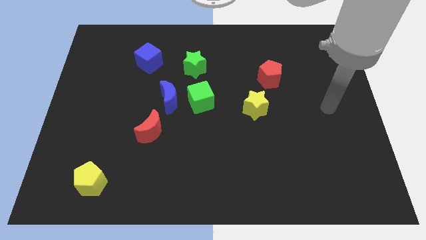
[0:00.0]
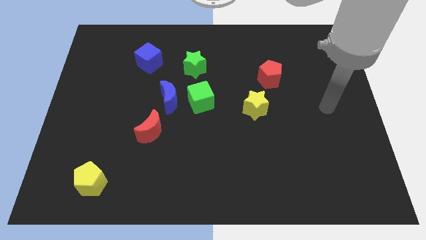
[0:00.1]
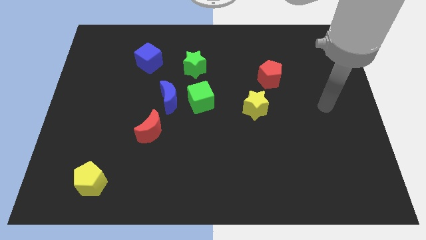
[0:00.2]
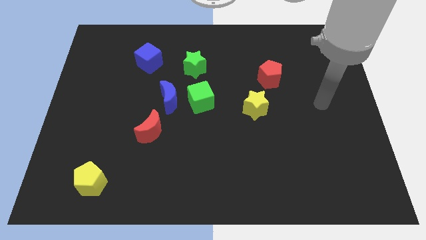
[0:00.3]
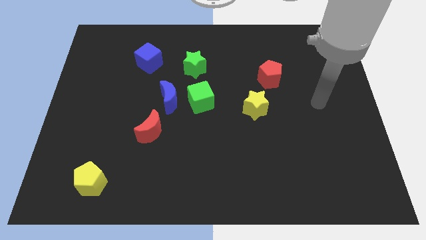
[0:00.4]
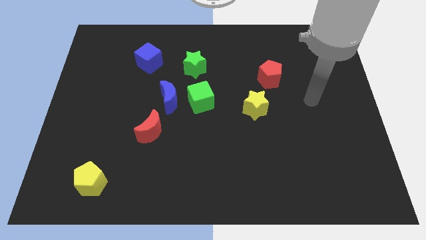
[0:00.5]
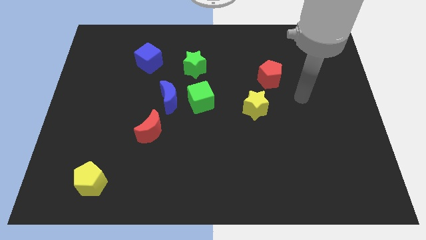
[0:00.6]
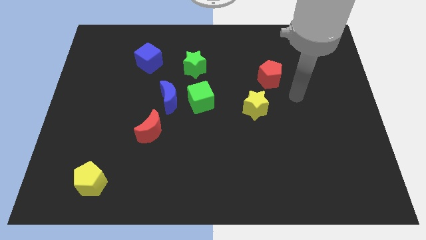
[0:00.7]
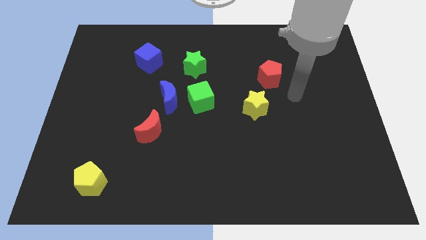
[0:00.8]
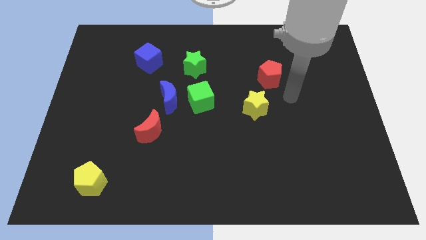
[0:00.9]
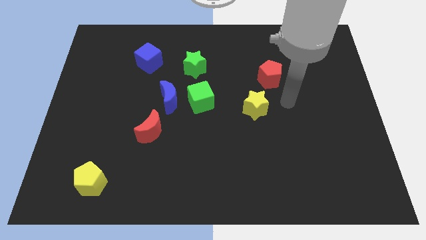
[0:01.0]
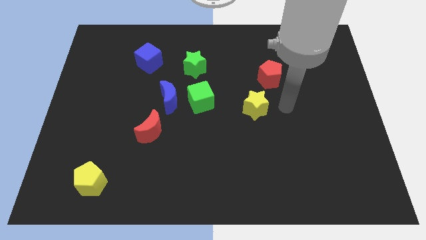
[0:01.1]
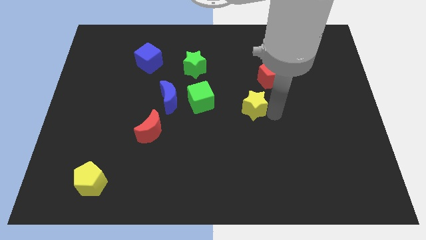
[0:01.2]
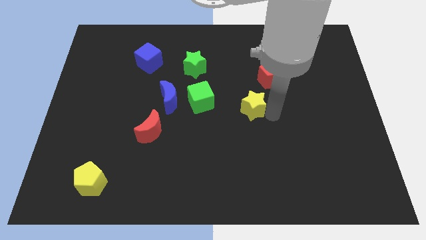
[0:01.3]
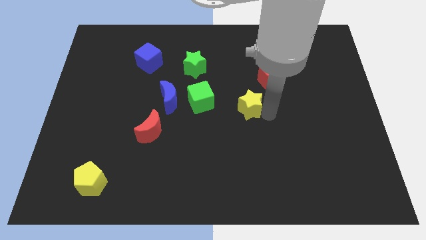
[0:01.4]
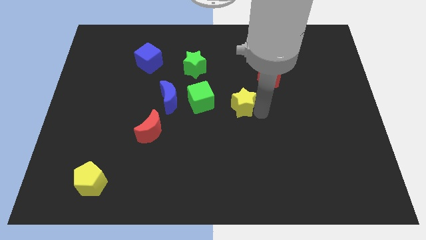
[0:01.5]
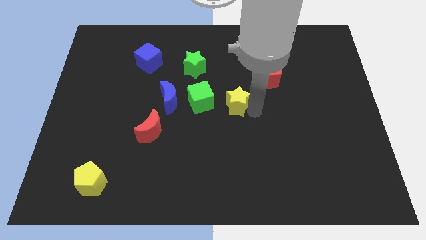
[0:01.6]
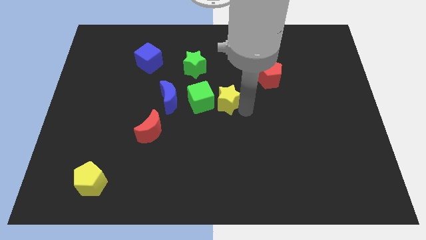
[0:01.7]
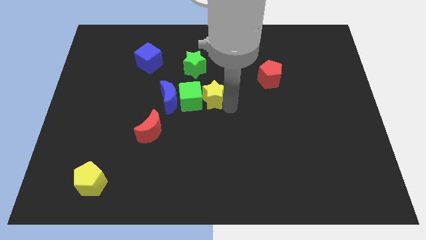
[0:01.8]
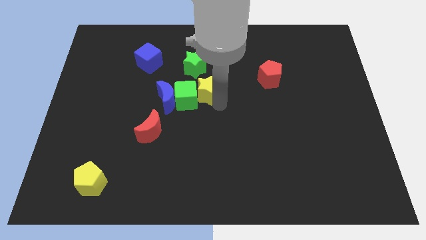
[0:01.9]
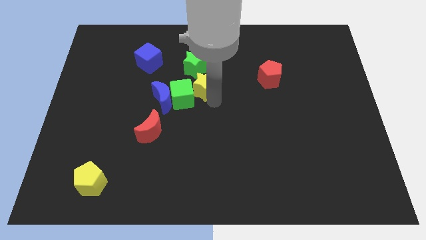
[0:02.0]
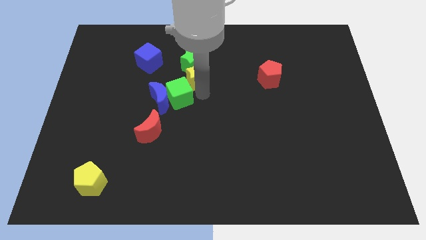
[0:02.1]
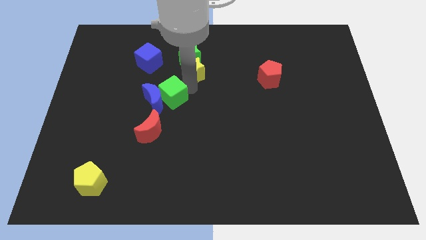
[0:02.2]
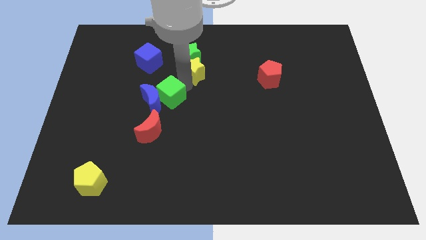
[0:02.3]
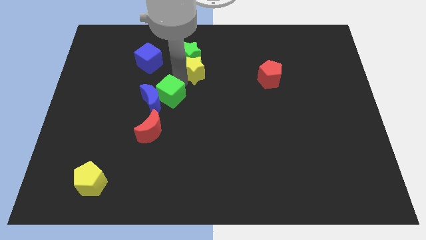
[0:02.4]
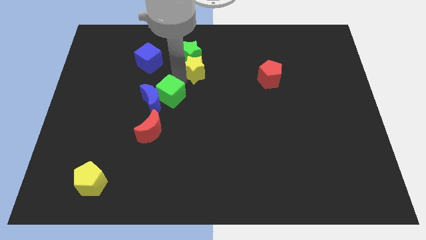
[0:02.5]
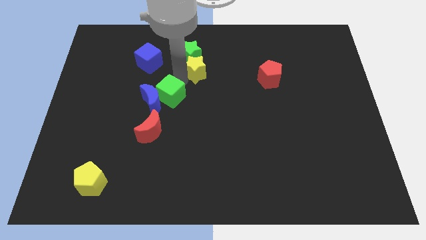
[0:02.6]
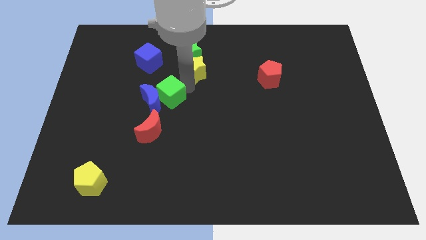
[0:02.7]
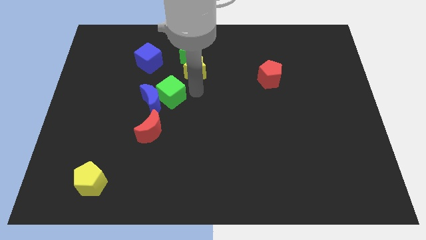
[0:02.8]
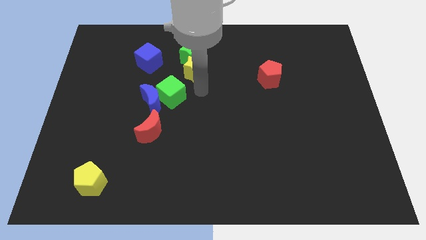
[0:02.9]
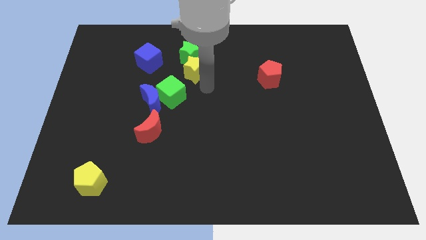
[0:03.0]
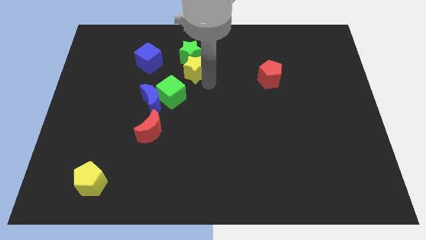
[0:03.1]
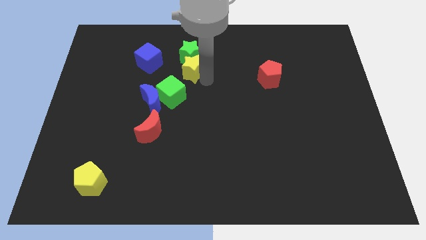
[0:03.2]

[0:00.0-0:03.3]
push yellow star below green star

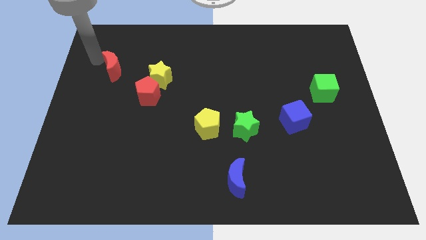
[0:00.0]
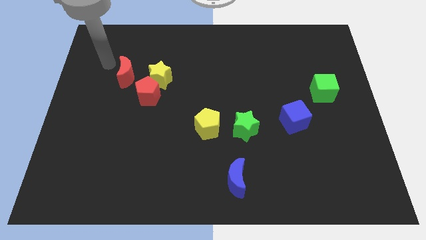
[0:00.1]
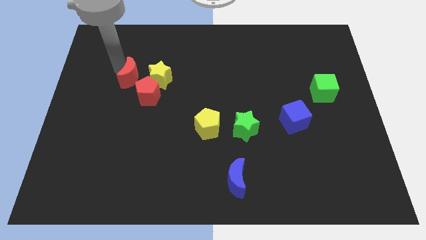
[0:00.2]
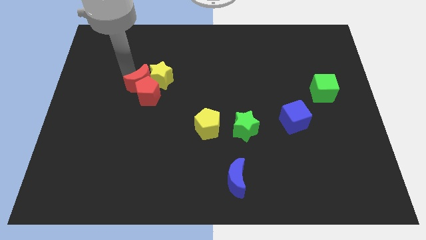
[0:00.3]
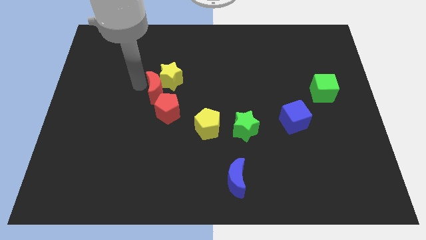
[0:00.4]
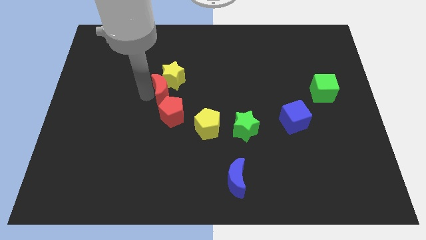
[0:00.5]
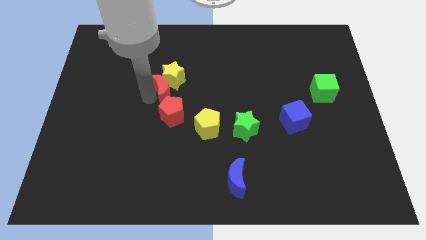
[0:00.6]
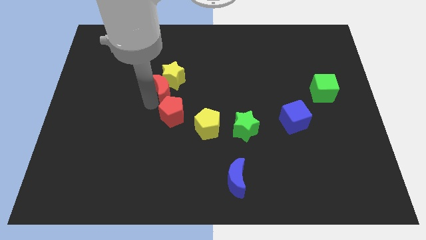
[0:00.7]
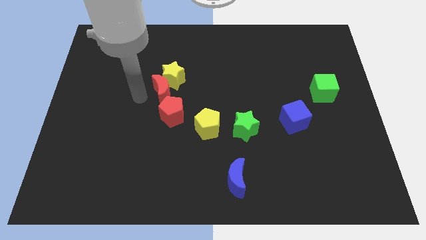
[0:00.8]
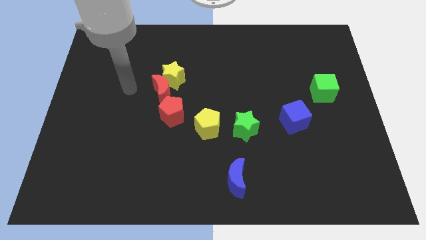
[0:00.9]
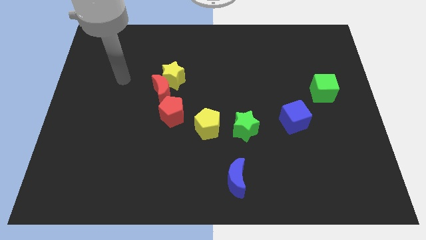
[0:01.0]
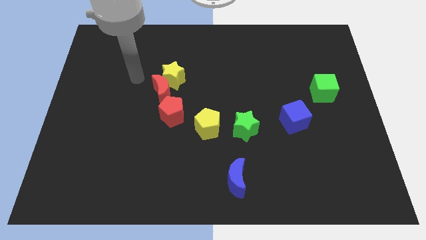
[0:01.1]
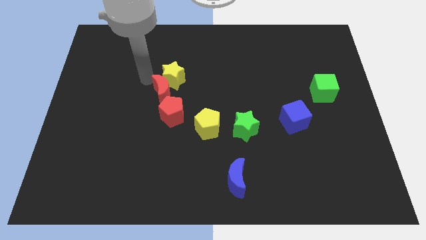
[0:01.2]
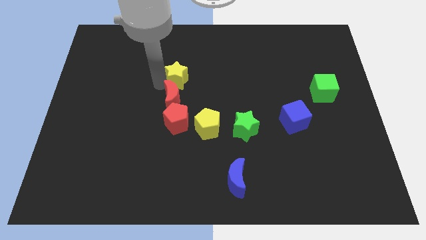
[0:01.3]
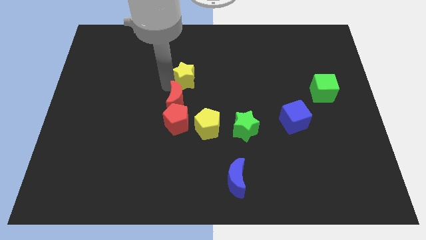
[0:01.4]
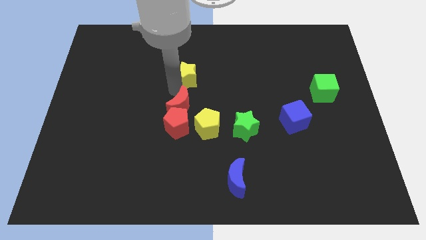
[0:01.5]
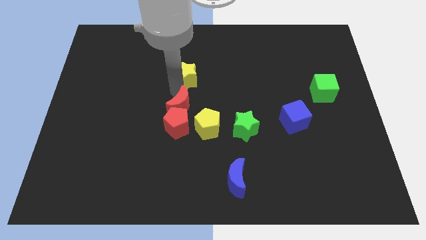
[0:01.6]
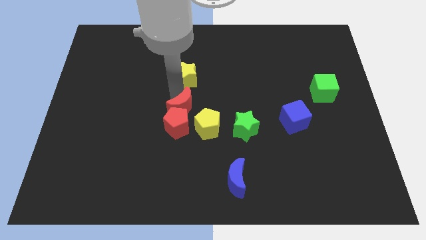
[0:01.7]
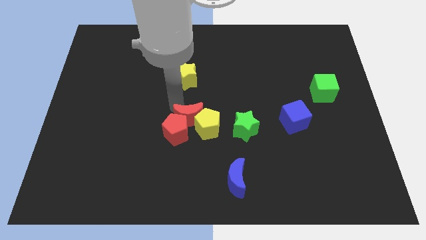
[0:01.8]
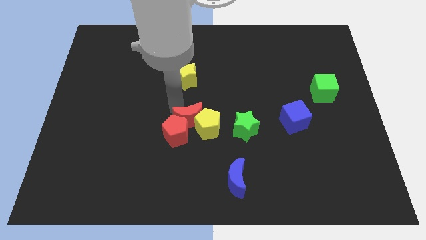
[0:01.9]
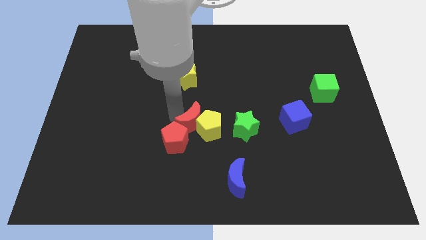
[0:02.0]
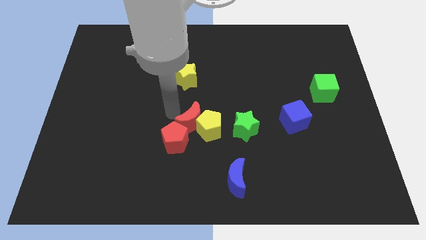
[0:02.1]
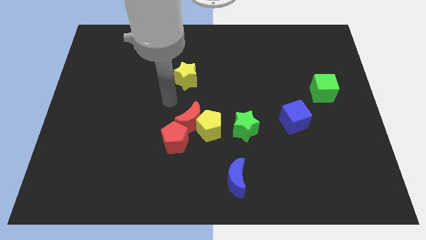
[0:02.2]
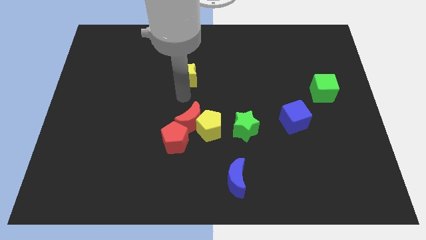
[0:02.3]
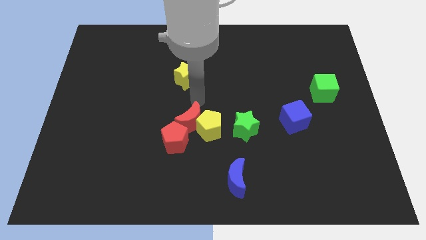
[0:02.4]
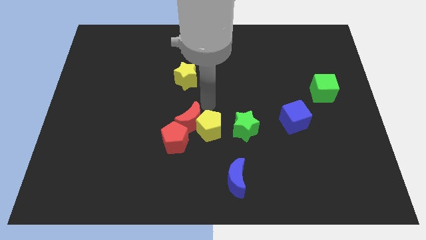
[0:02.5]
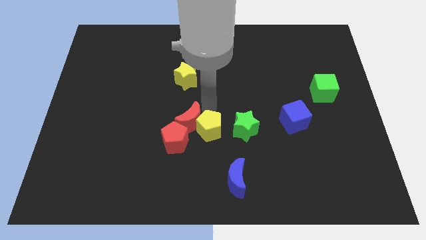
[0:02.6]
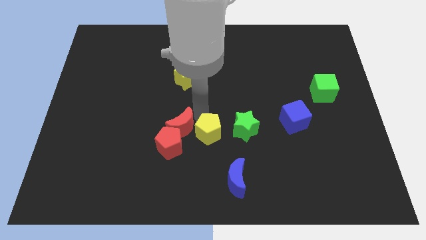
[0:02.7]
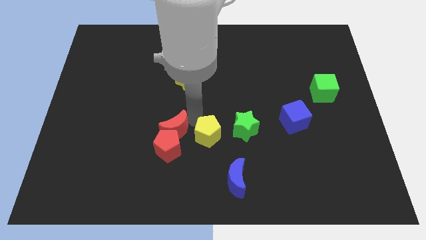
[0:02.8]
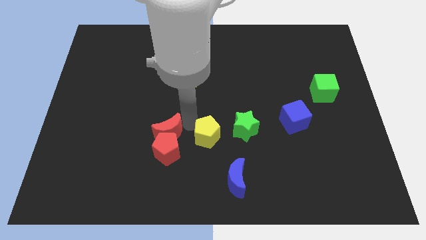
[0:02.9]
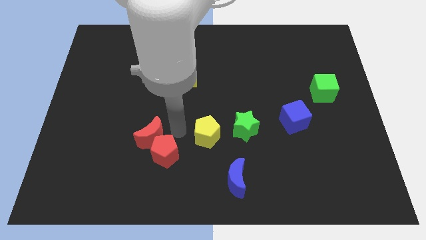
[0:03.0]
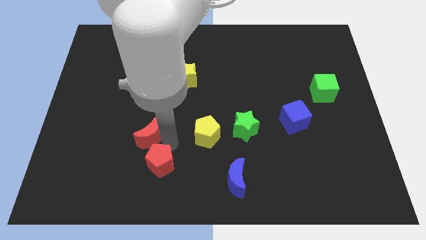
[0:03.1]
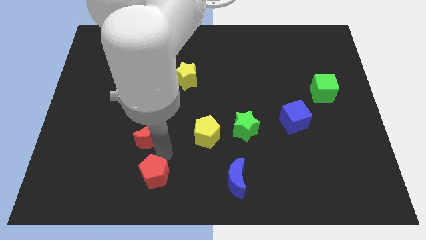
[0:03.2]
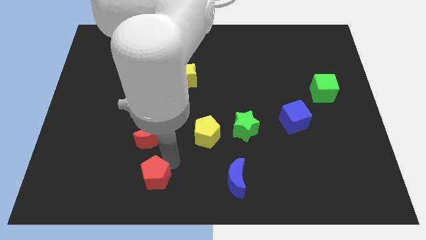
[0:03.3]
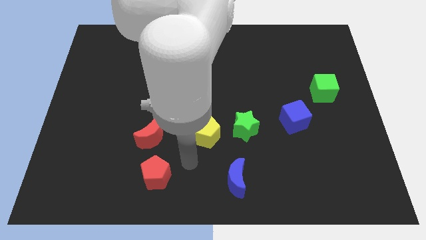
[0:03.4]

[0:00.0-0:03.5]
move the red pentagon slightly downwards

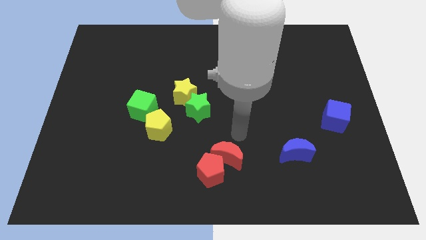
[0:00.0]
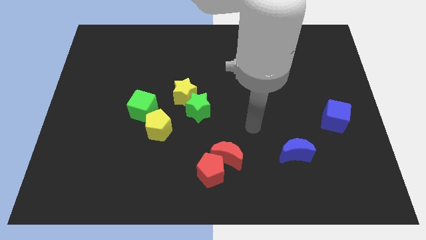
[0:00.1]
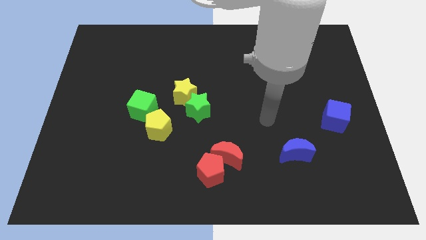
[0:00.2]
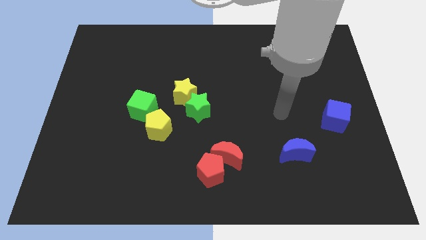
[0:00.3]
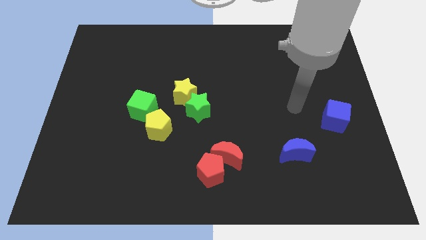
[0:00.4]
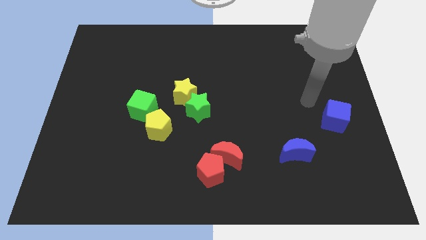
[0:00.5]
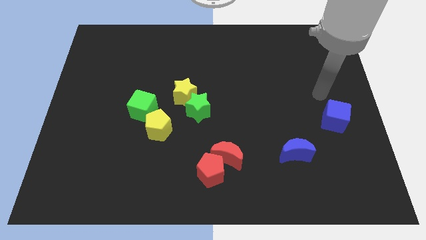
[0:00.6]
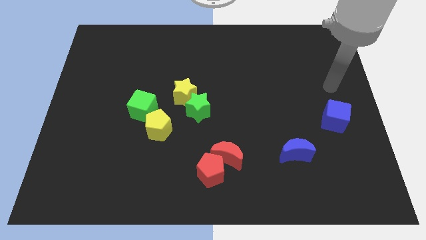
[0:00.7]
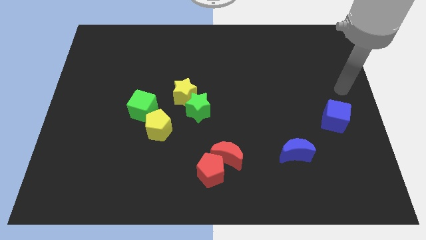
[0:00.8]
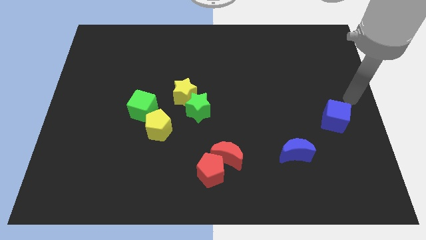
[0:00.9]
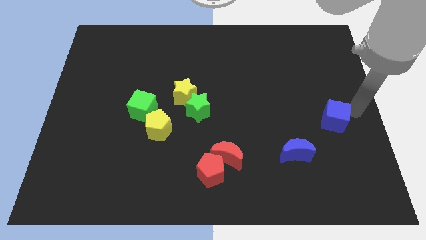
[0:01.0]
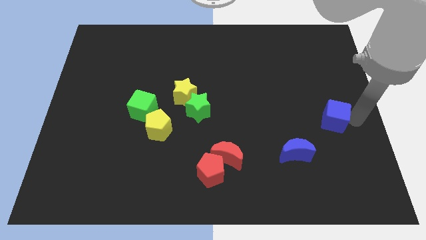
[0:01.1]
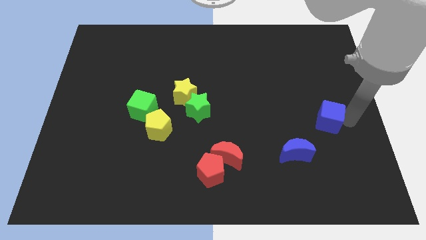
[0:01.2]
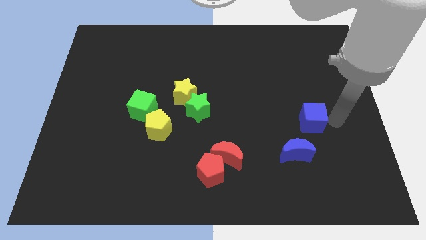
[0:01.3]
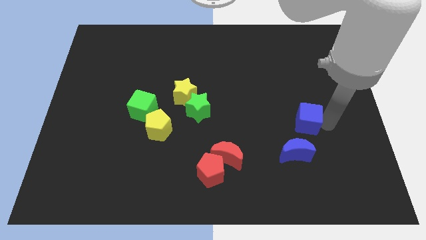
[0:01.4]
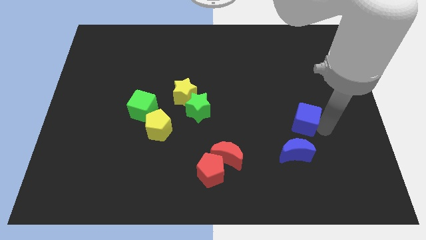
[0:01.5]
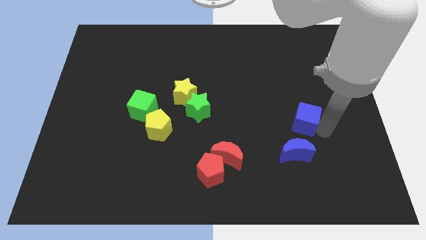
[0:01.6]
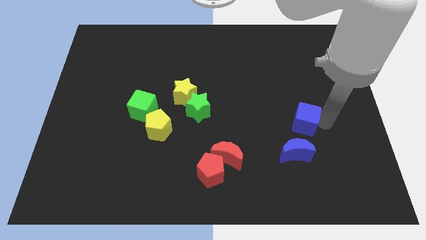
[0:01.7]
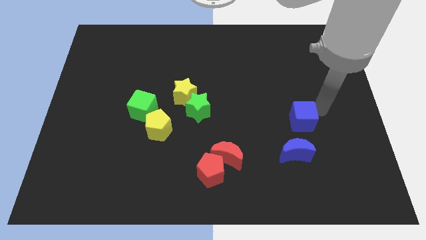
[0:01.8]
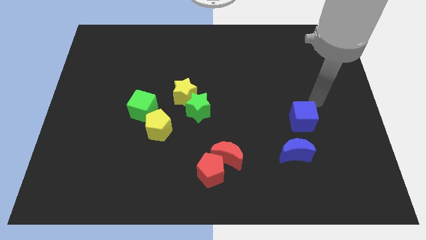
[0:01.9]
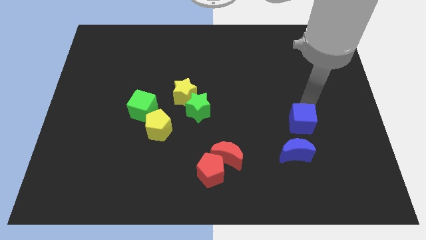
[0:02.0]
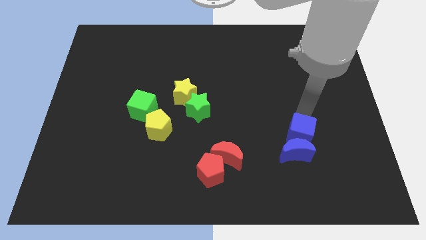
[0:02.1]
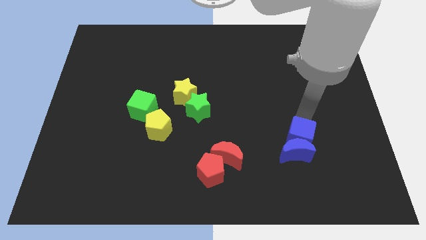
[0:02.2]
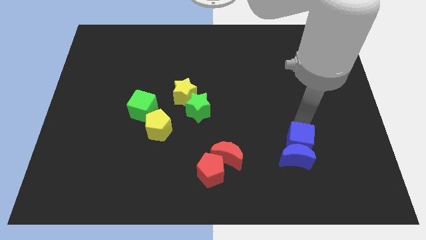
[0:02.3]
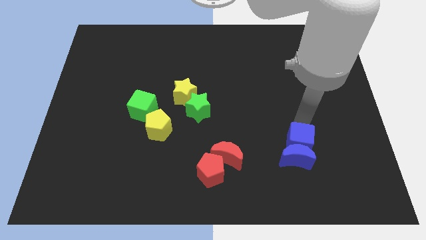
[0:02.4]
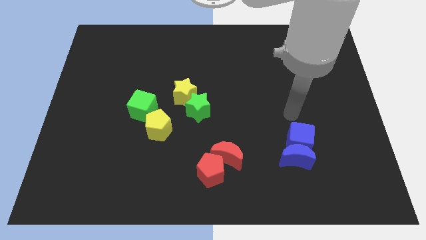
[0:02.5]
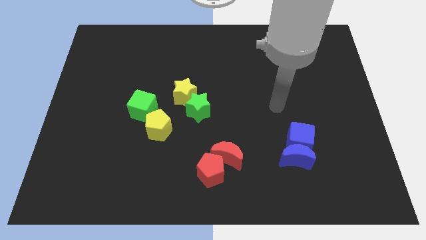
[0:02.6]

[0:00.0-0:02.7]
move the blue cube above the blue moon
